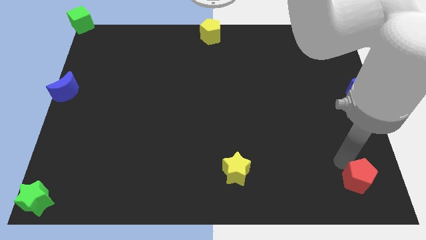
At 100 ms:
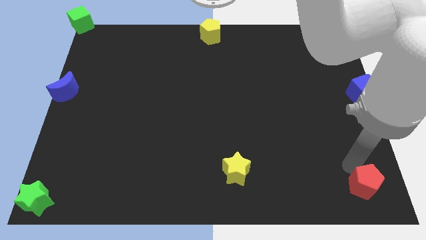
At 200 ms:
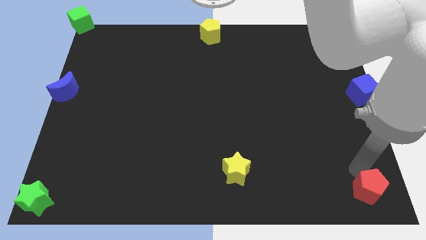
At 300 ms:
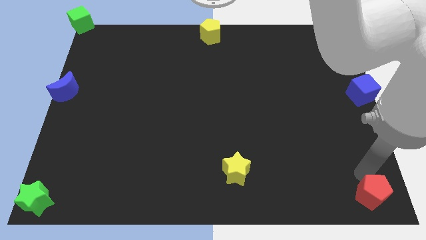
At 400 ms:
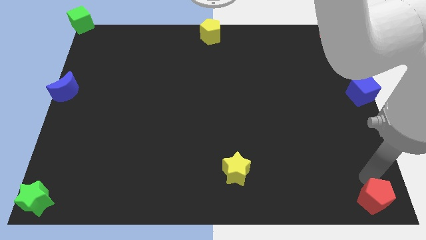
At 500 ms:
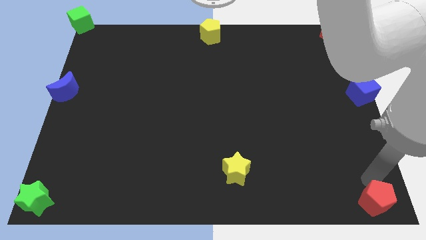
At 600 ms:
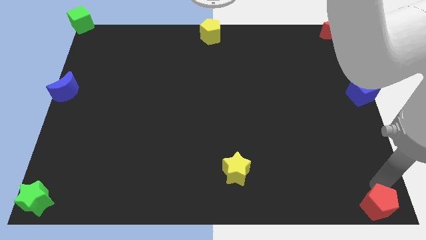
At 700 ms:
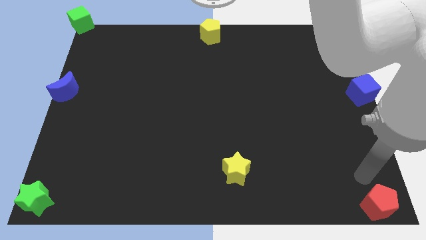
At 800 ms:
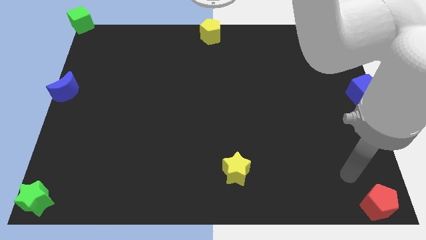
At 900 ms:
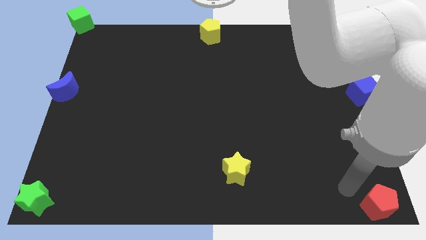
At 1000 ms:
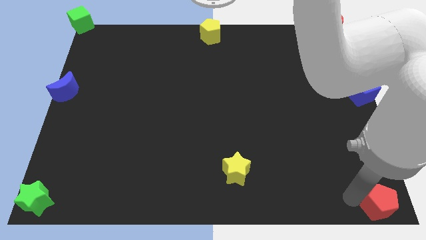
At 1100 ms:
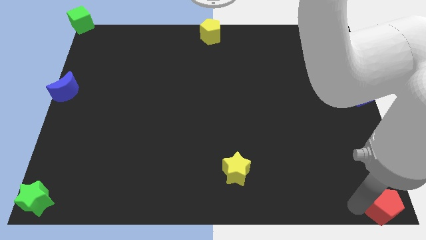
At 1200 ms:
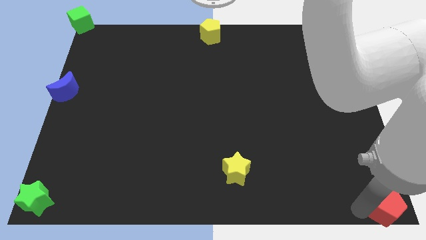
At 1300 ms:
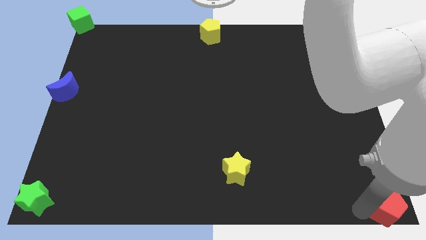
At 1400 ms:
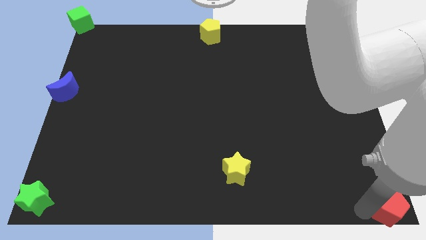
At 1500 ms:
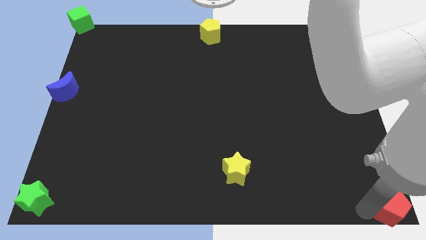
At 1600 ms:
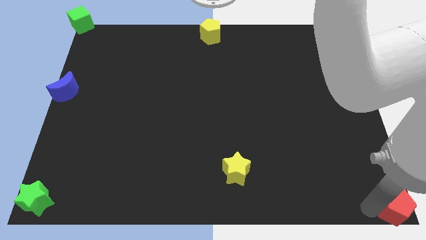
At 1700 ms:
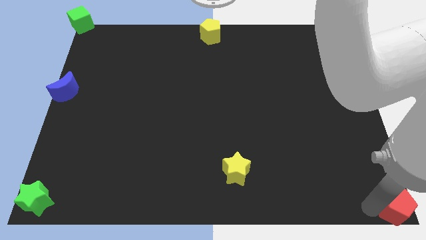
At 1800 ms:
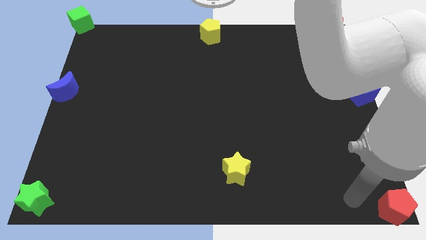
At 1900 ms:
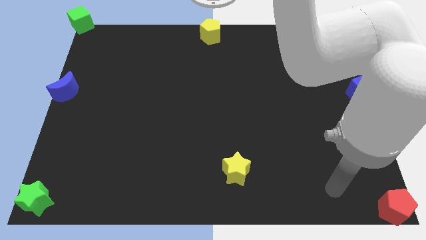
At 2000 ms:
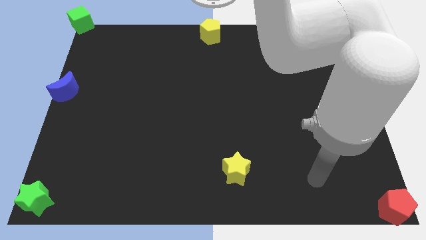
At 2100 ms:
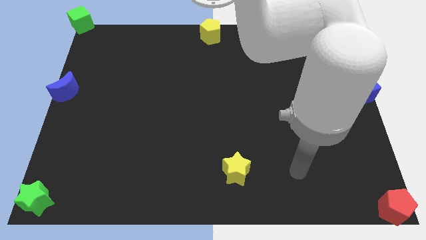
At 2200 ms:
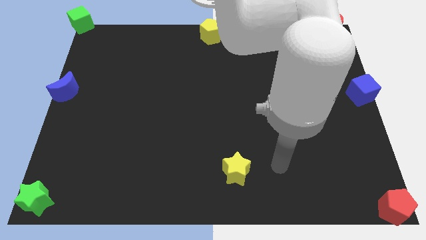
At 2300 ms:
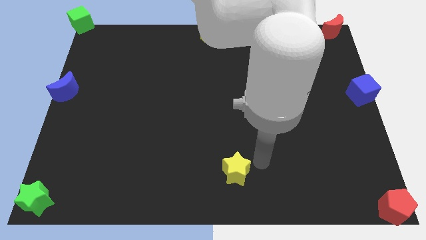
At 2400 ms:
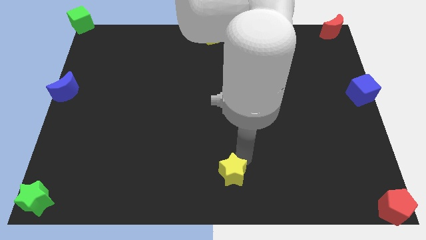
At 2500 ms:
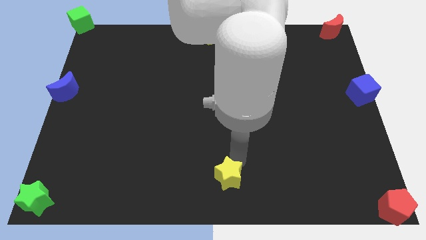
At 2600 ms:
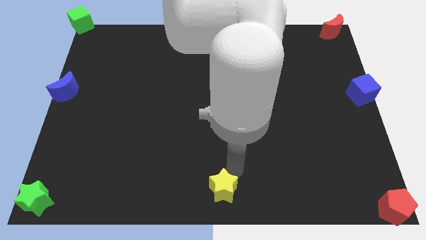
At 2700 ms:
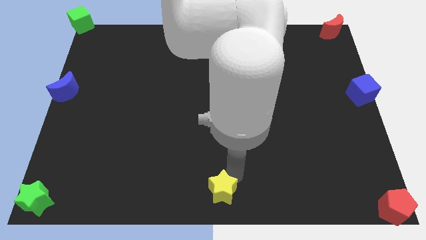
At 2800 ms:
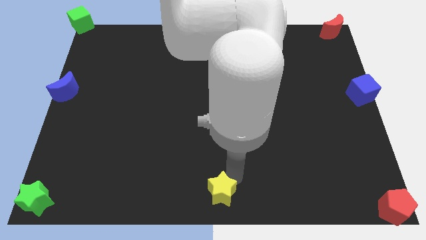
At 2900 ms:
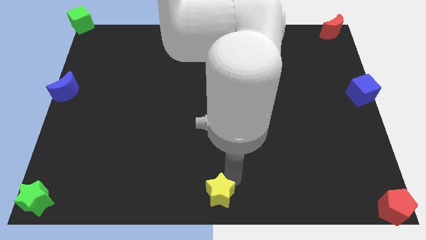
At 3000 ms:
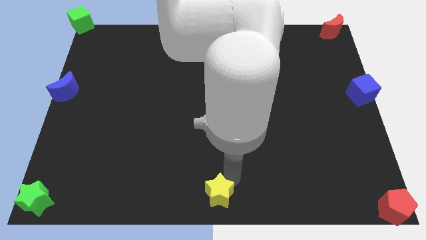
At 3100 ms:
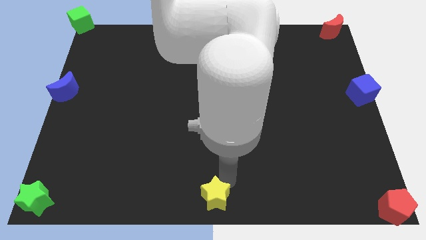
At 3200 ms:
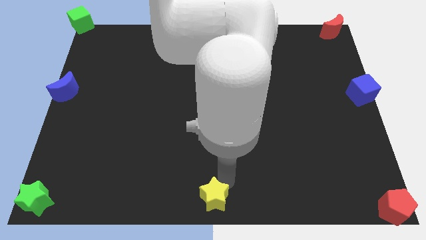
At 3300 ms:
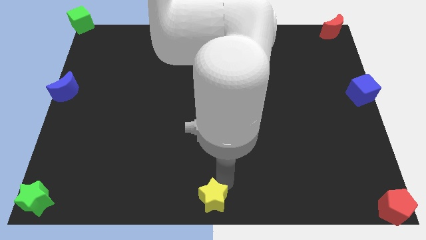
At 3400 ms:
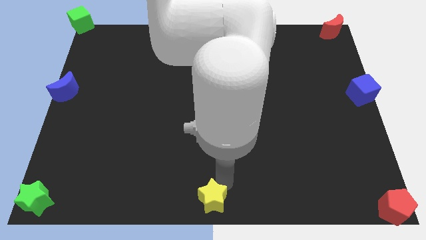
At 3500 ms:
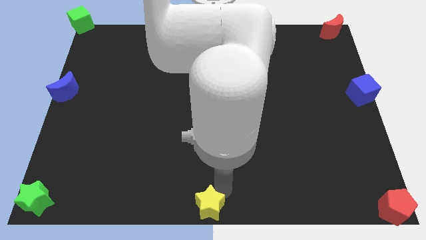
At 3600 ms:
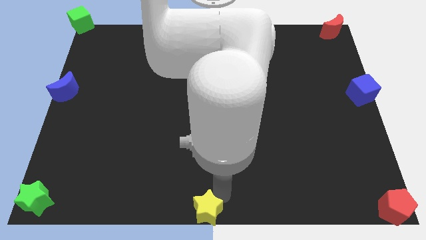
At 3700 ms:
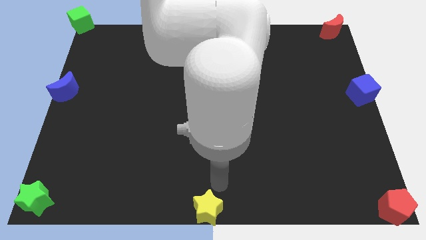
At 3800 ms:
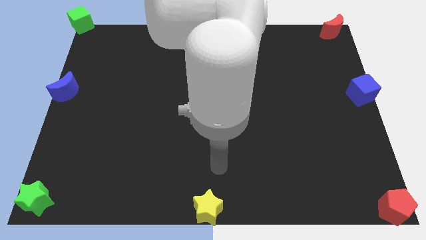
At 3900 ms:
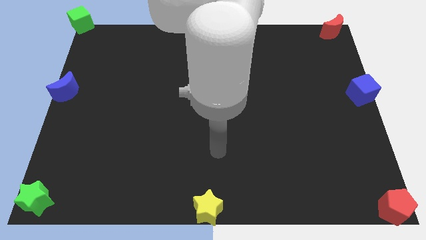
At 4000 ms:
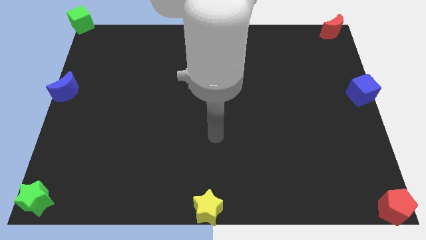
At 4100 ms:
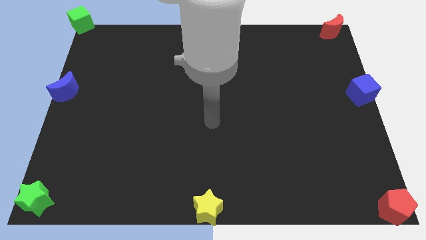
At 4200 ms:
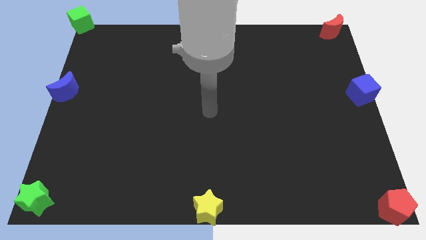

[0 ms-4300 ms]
place the yellow block to the left of red pentagon

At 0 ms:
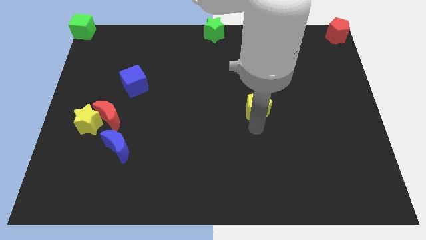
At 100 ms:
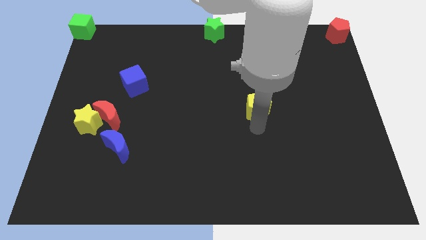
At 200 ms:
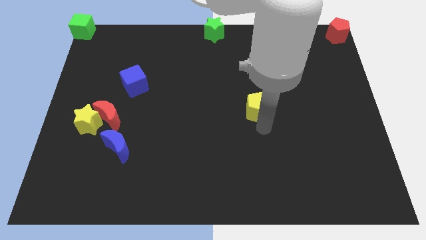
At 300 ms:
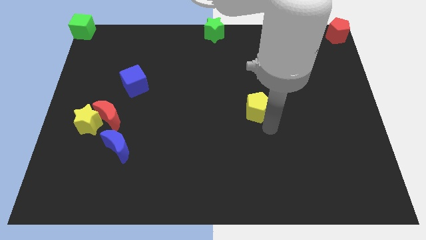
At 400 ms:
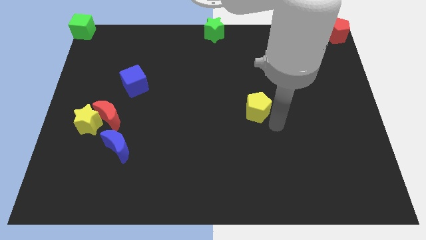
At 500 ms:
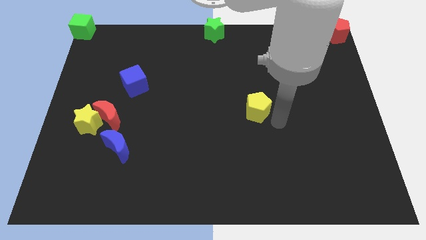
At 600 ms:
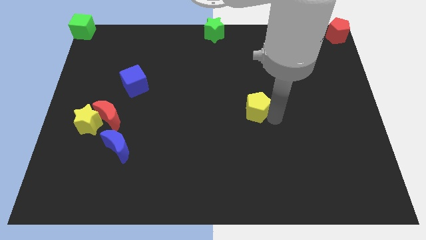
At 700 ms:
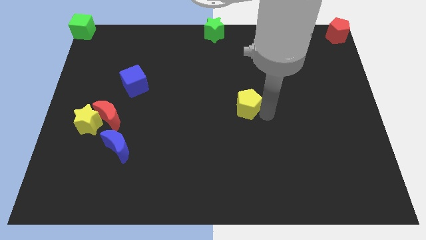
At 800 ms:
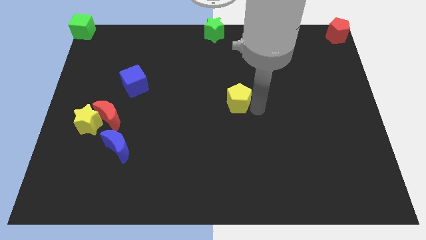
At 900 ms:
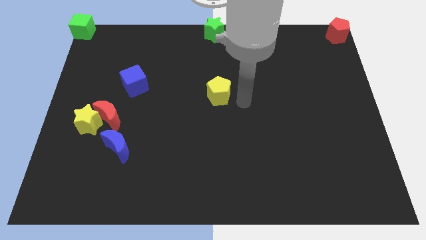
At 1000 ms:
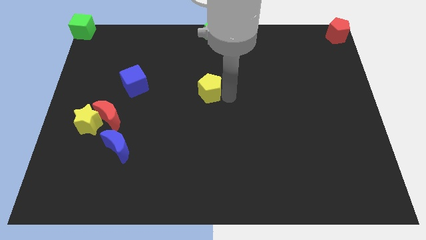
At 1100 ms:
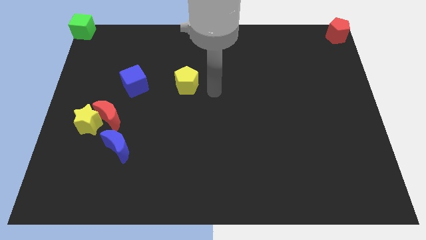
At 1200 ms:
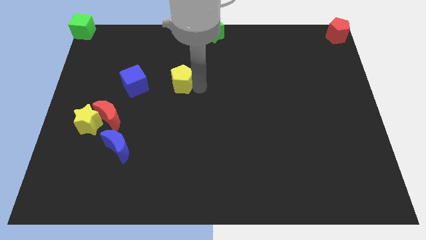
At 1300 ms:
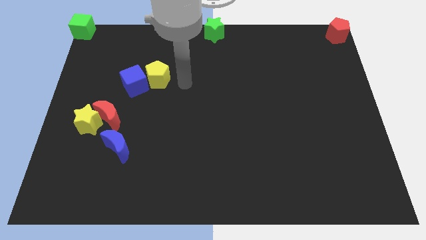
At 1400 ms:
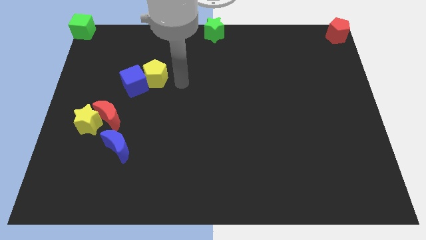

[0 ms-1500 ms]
place the yellow pentagon to the right of the blue cube

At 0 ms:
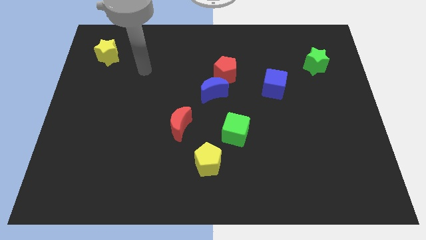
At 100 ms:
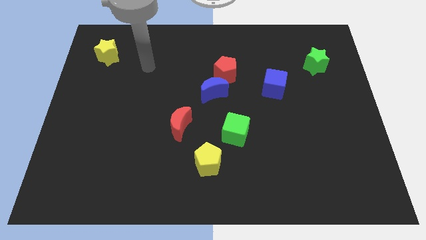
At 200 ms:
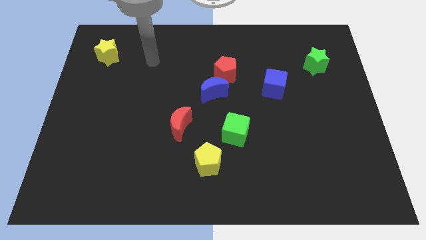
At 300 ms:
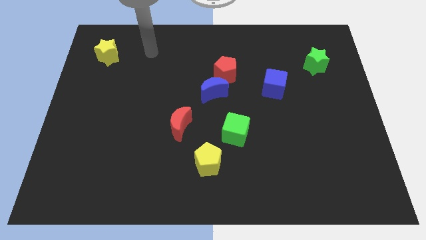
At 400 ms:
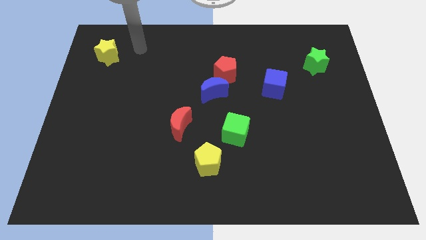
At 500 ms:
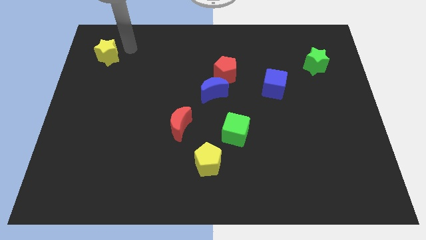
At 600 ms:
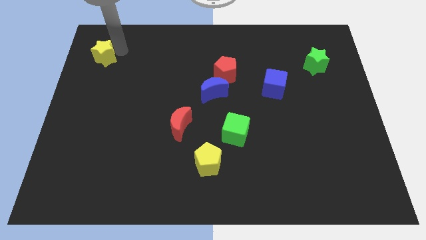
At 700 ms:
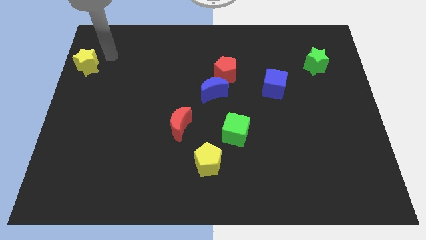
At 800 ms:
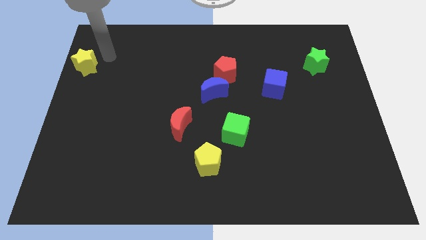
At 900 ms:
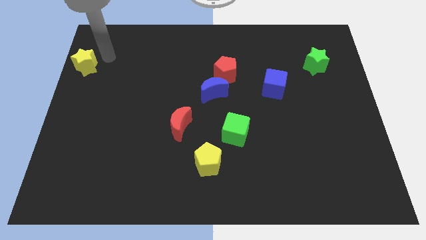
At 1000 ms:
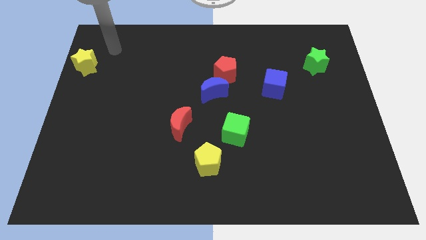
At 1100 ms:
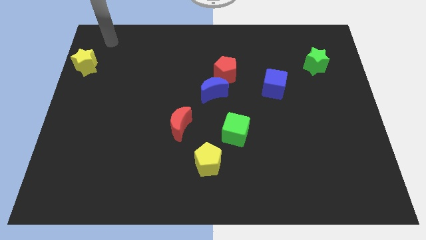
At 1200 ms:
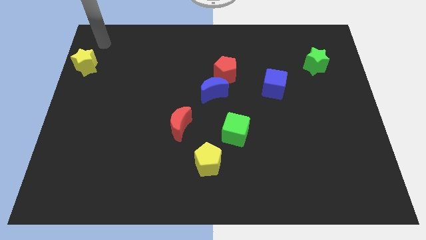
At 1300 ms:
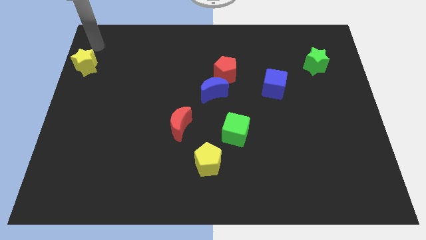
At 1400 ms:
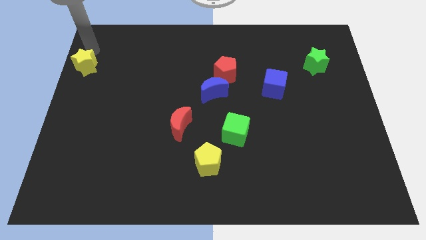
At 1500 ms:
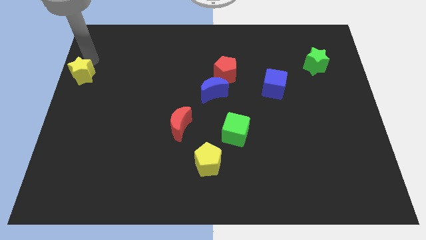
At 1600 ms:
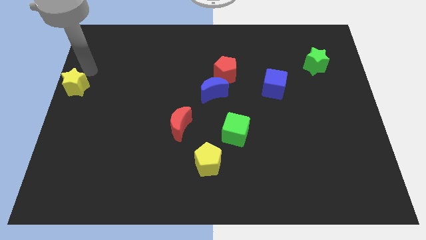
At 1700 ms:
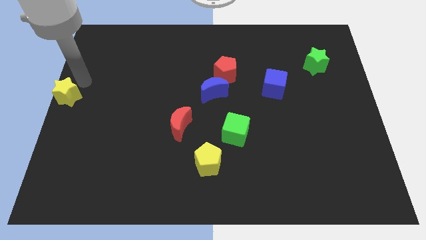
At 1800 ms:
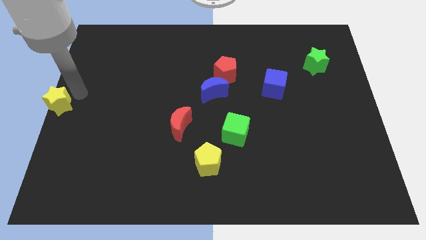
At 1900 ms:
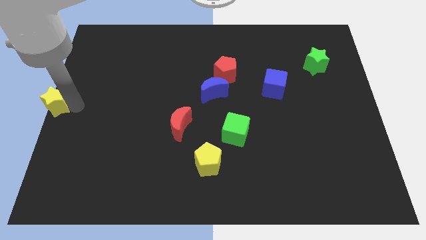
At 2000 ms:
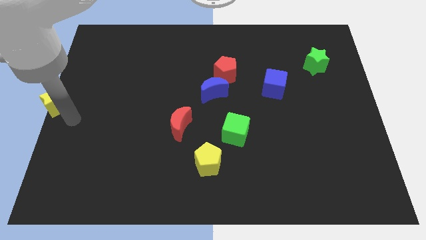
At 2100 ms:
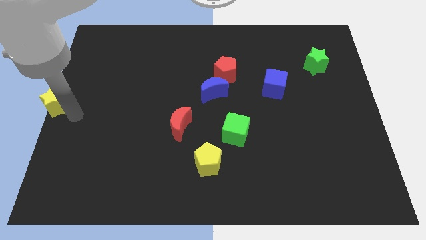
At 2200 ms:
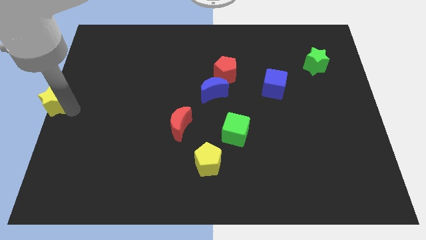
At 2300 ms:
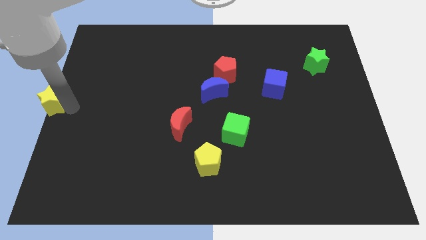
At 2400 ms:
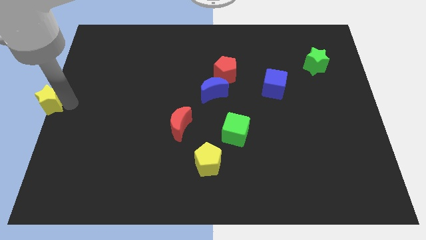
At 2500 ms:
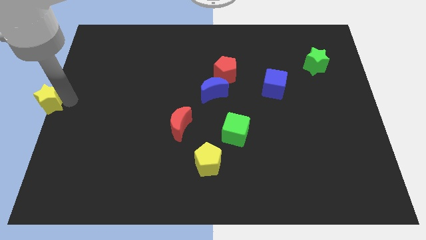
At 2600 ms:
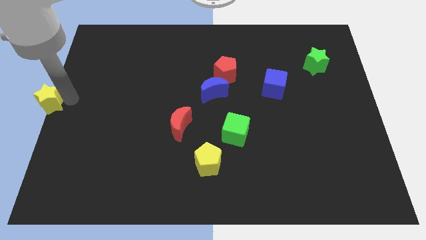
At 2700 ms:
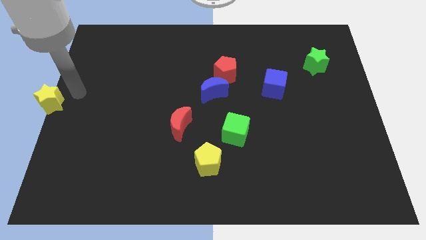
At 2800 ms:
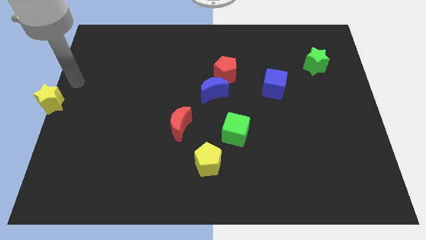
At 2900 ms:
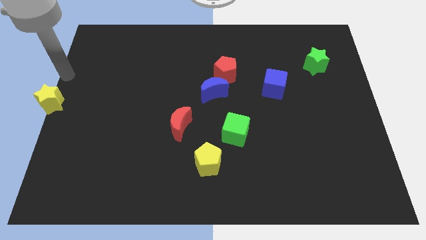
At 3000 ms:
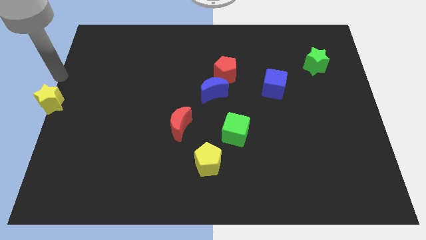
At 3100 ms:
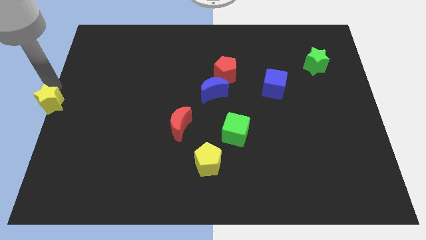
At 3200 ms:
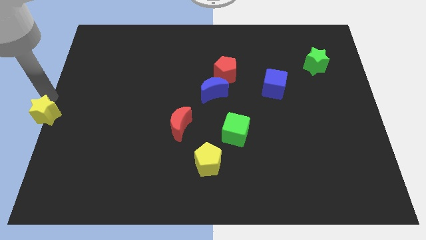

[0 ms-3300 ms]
adjust the yellow star to the center left of the board
